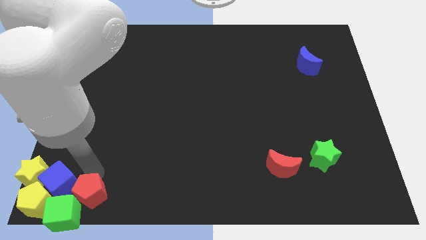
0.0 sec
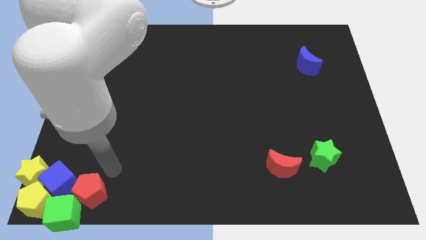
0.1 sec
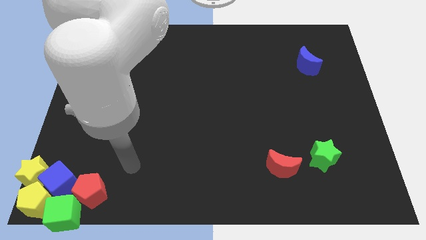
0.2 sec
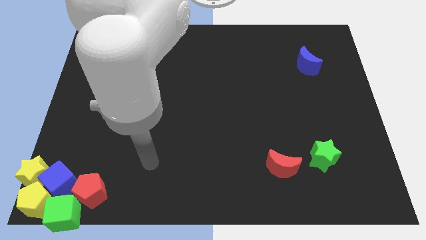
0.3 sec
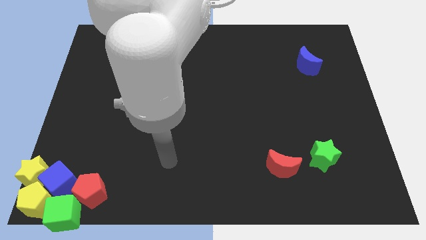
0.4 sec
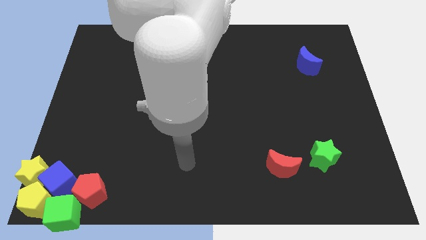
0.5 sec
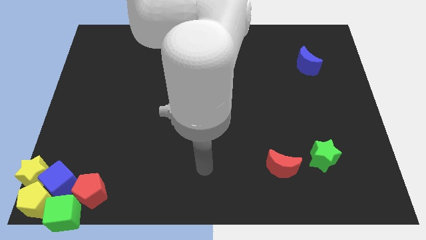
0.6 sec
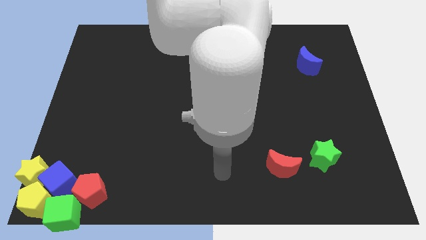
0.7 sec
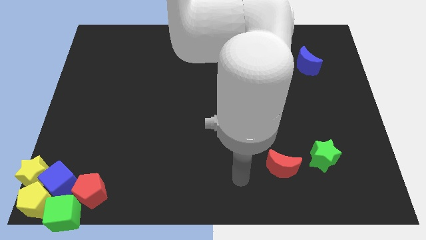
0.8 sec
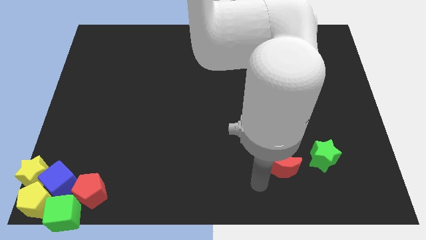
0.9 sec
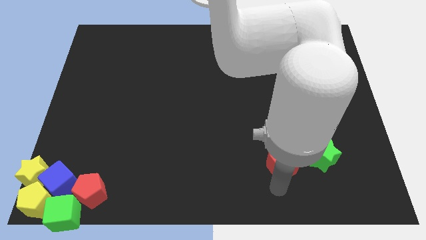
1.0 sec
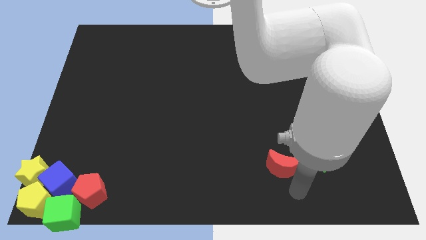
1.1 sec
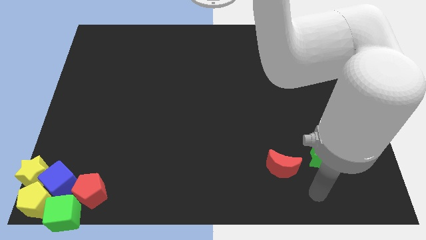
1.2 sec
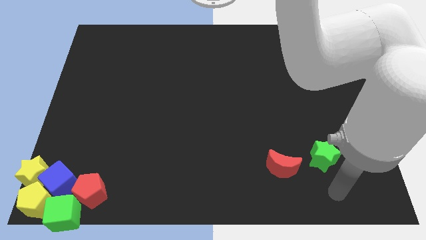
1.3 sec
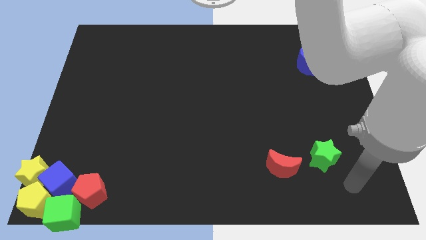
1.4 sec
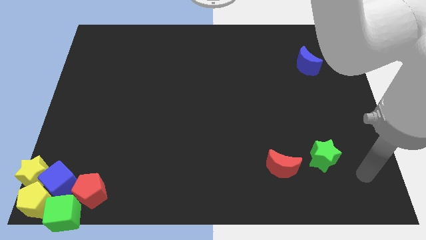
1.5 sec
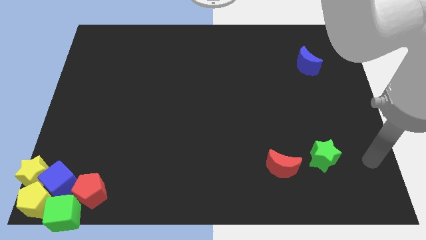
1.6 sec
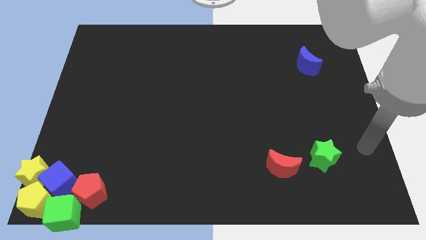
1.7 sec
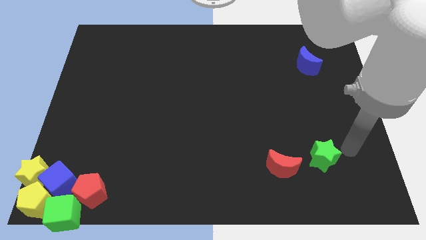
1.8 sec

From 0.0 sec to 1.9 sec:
move your arm right to the green star

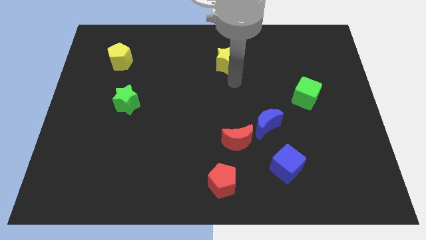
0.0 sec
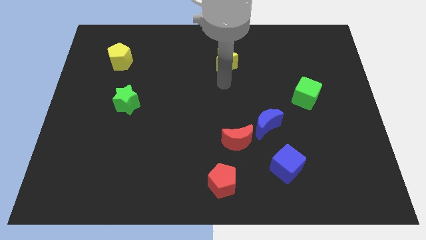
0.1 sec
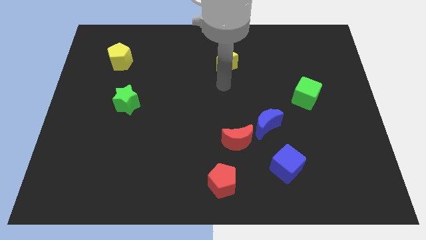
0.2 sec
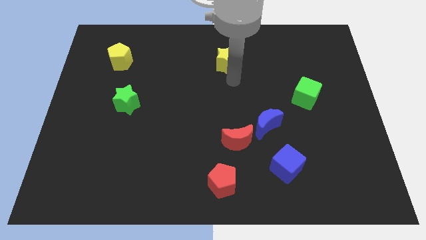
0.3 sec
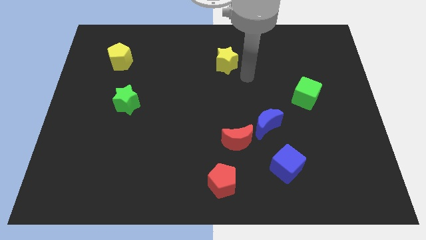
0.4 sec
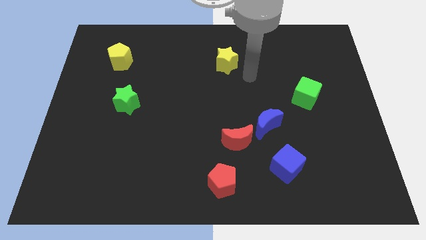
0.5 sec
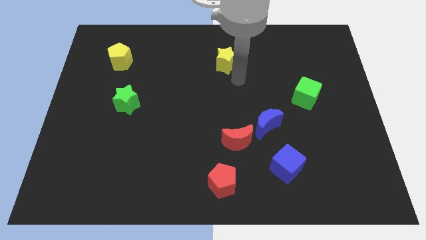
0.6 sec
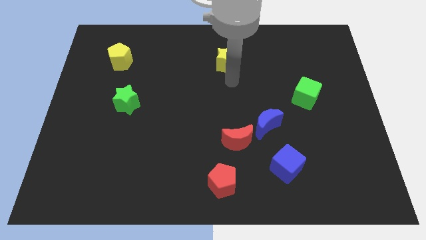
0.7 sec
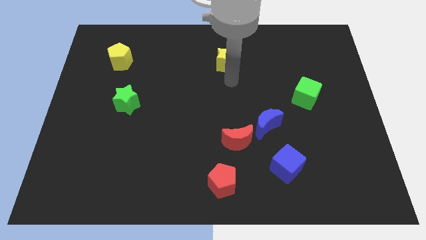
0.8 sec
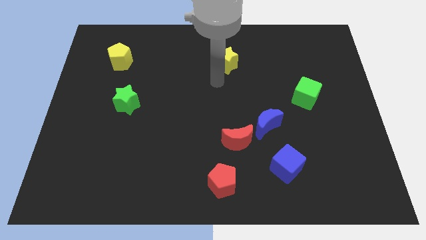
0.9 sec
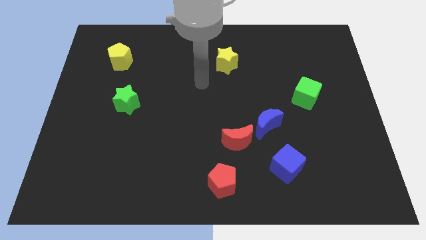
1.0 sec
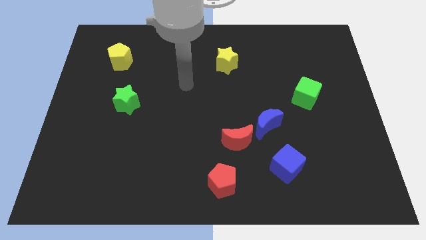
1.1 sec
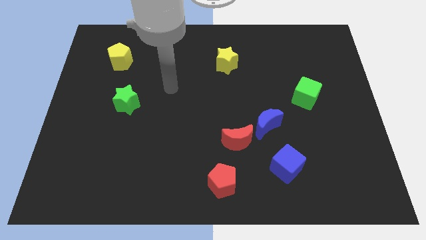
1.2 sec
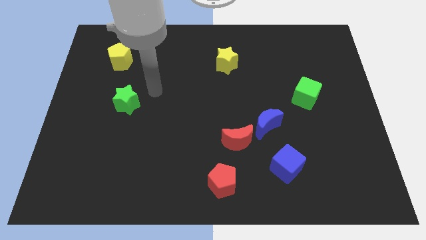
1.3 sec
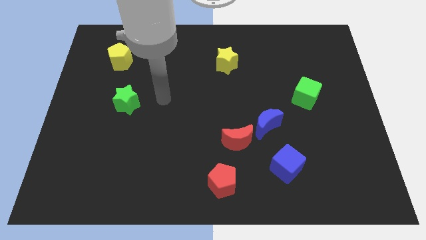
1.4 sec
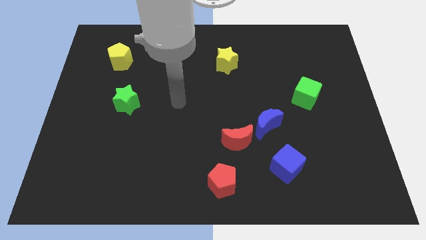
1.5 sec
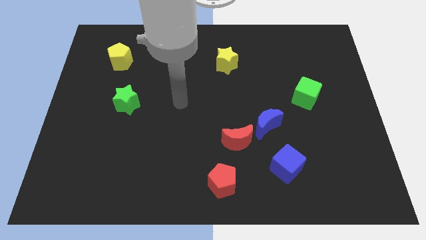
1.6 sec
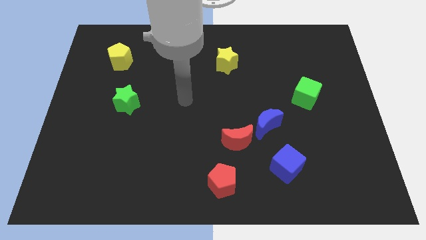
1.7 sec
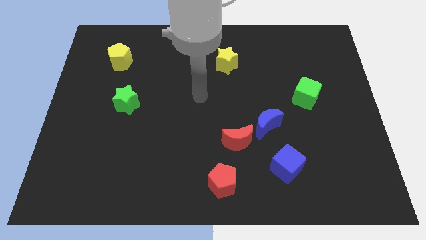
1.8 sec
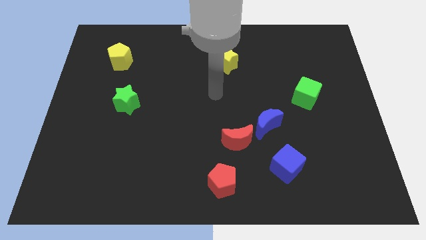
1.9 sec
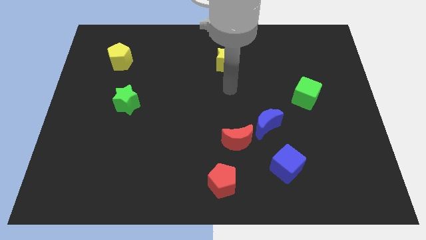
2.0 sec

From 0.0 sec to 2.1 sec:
move your arm towards the red moon

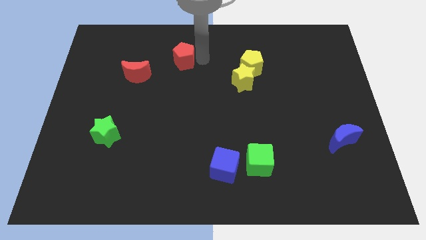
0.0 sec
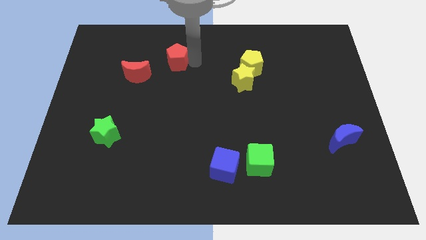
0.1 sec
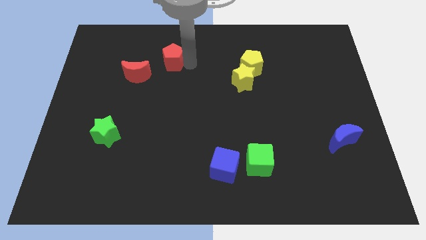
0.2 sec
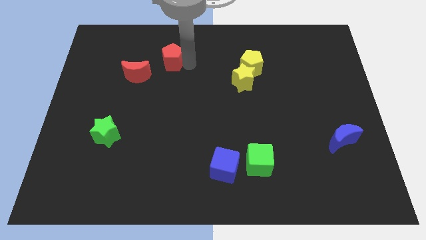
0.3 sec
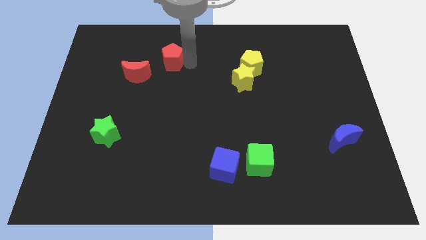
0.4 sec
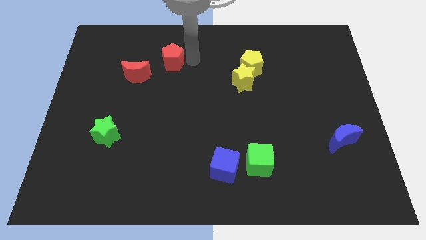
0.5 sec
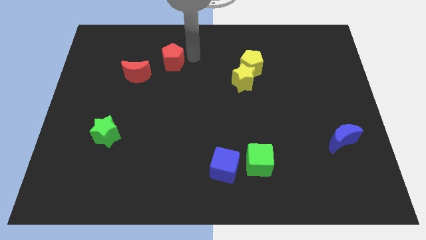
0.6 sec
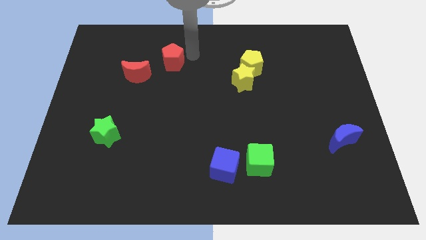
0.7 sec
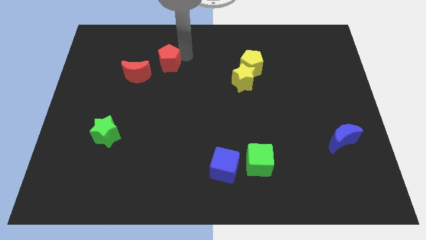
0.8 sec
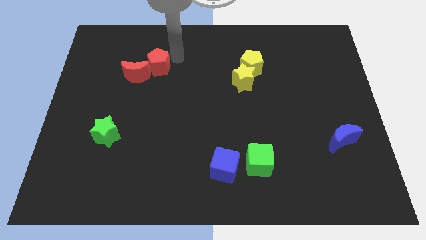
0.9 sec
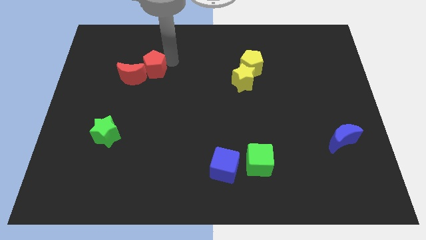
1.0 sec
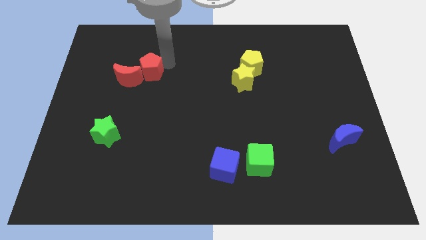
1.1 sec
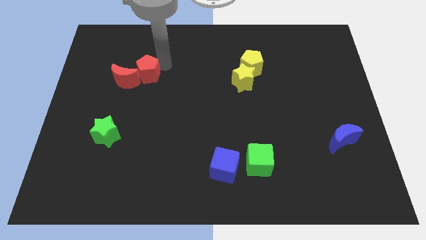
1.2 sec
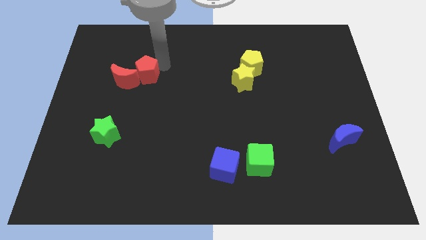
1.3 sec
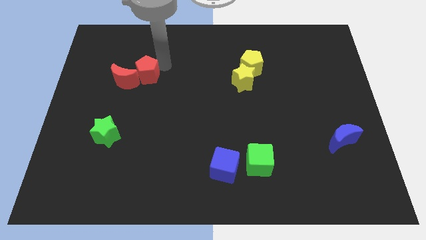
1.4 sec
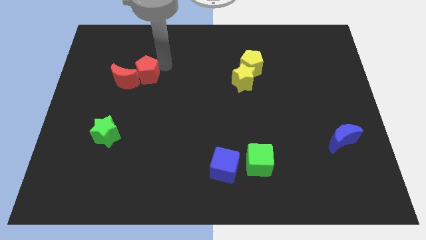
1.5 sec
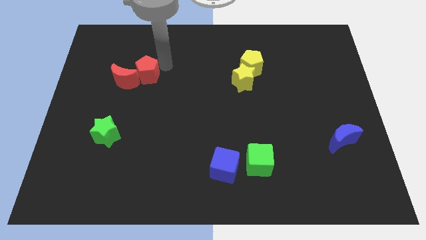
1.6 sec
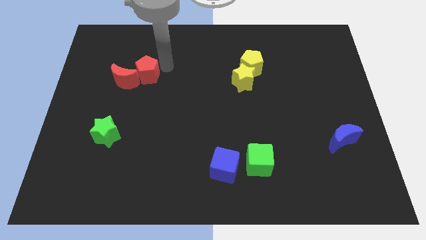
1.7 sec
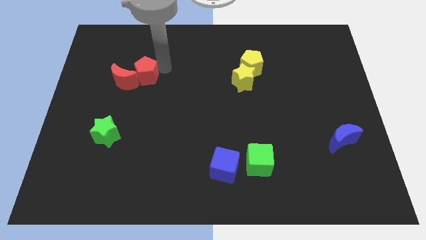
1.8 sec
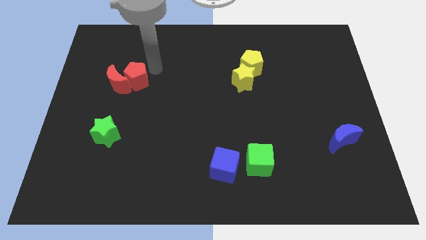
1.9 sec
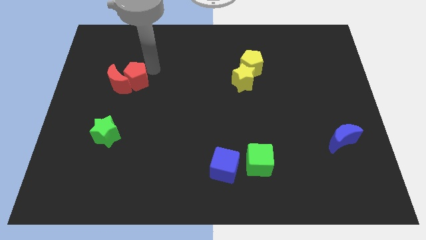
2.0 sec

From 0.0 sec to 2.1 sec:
move the red pentagon into the red crescent

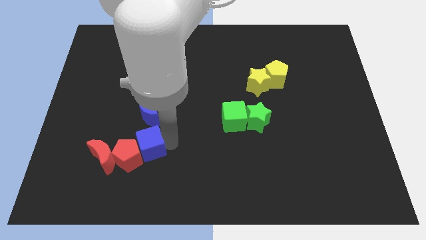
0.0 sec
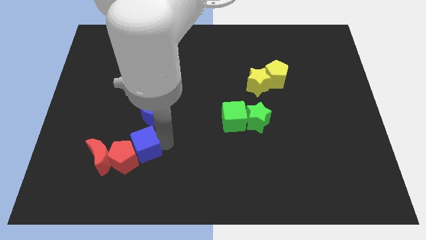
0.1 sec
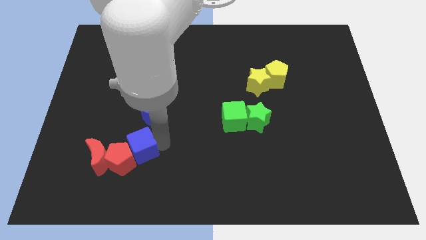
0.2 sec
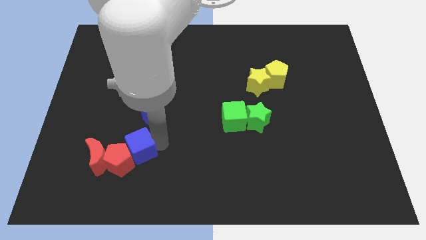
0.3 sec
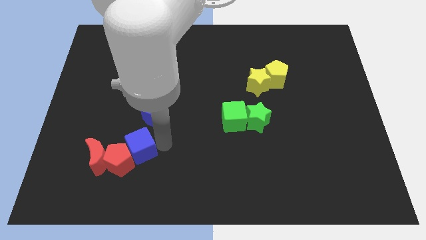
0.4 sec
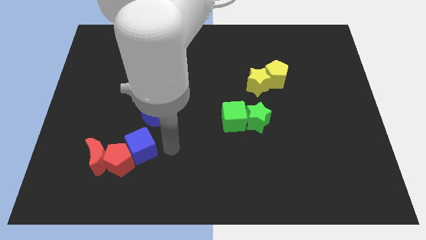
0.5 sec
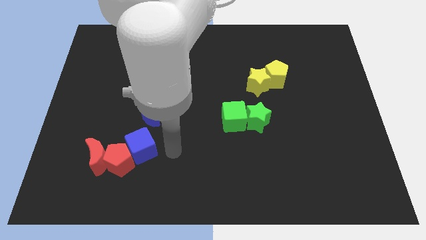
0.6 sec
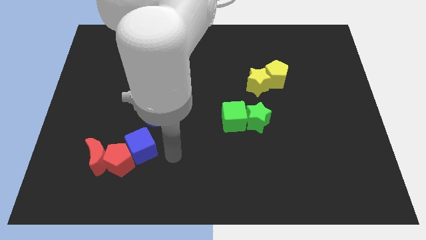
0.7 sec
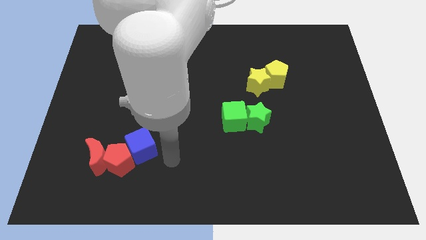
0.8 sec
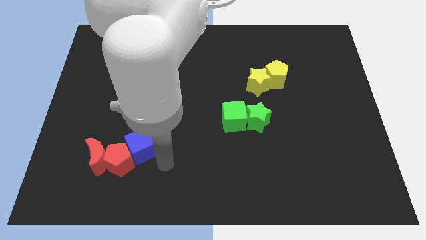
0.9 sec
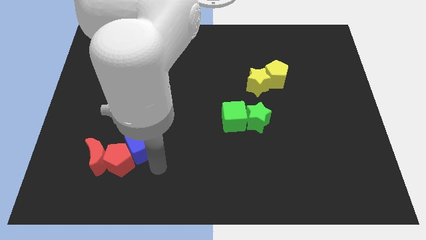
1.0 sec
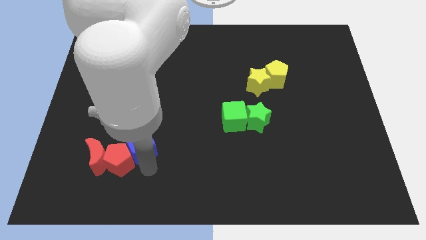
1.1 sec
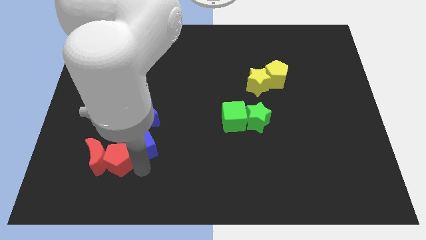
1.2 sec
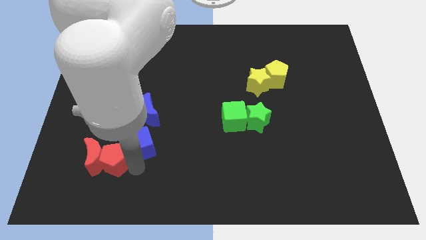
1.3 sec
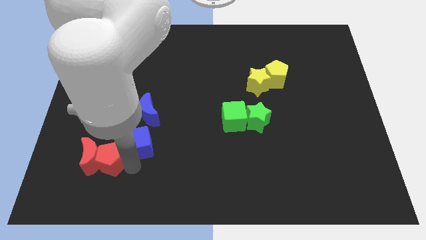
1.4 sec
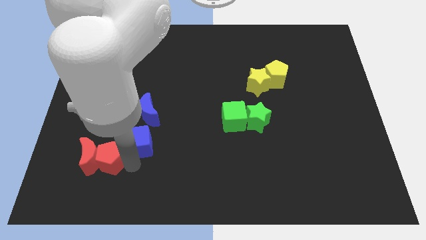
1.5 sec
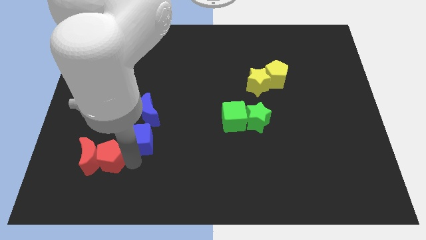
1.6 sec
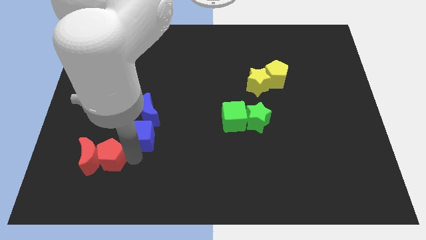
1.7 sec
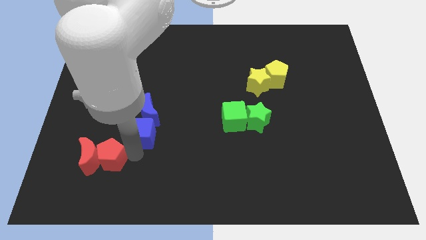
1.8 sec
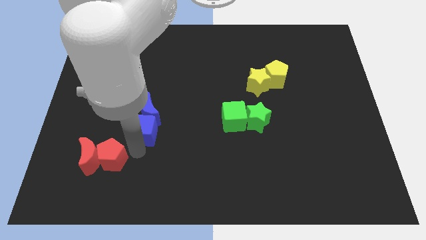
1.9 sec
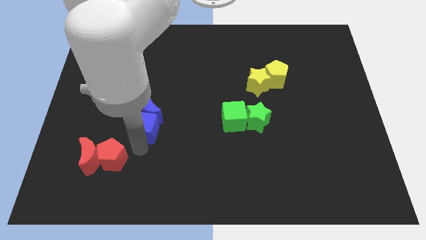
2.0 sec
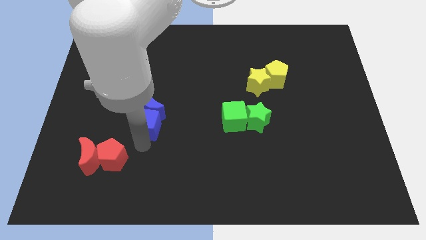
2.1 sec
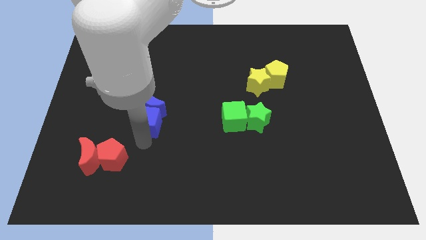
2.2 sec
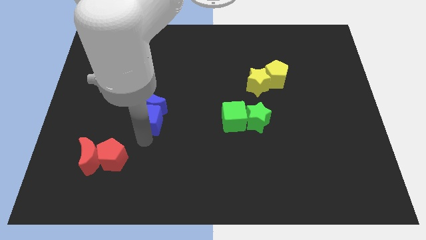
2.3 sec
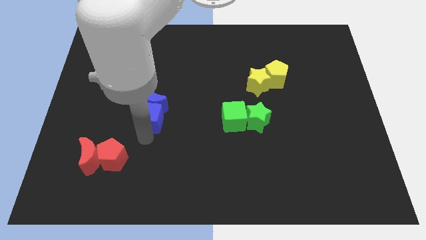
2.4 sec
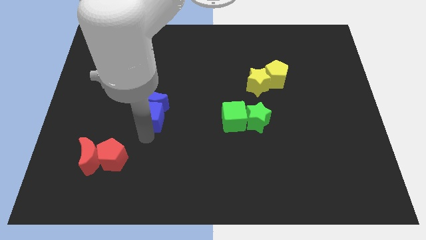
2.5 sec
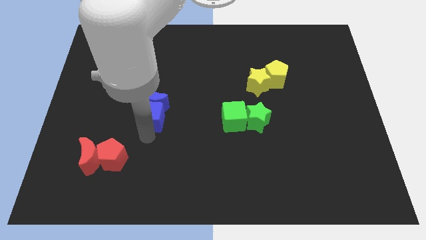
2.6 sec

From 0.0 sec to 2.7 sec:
push the blue cube into the blue crescent

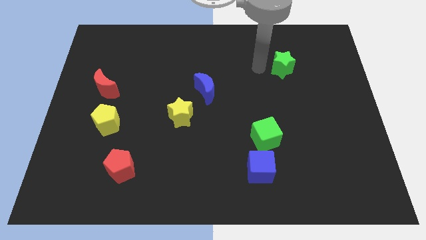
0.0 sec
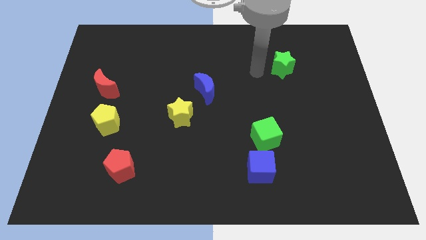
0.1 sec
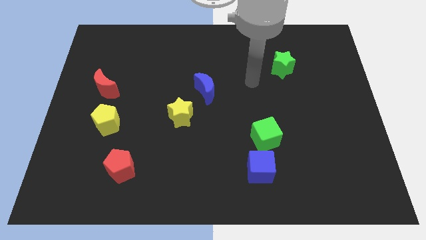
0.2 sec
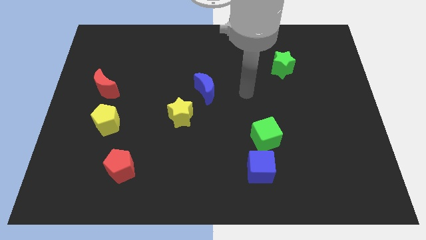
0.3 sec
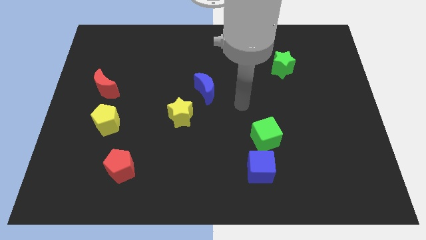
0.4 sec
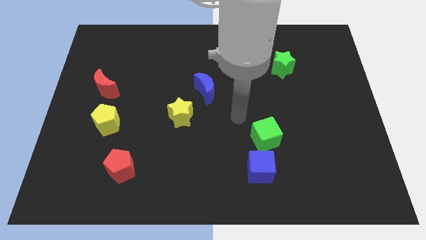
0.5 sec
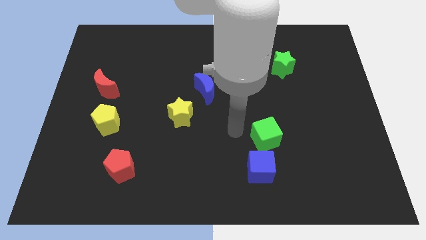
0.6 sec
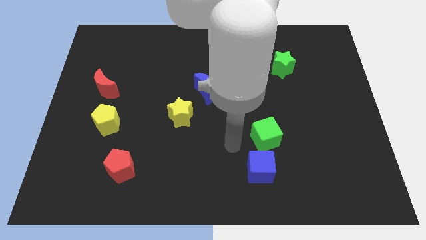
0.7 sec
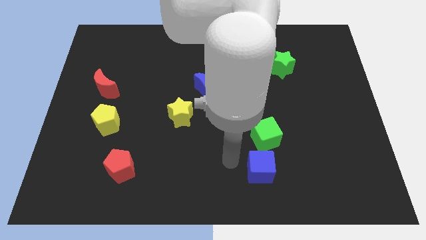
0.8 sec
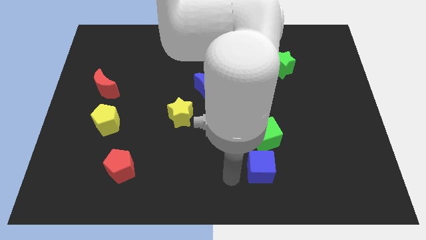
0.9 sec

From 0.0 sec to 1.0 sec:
point your arm at the left side of the blue cube
